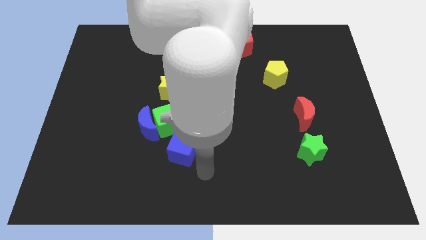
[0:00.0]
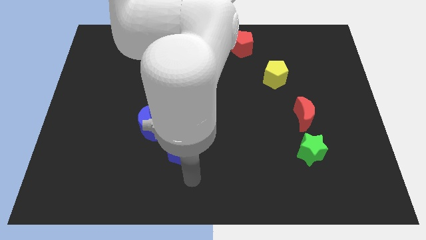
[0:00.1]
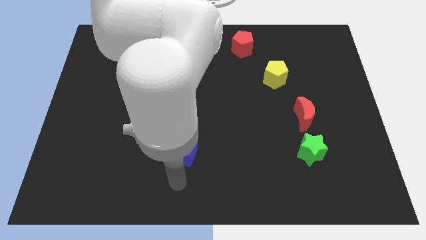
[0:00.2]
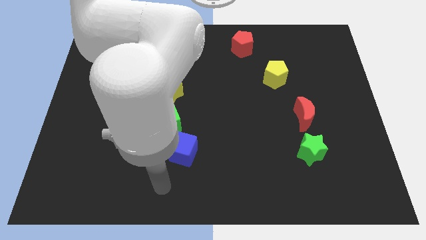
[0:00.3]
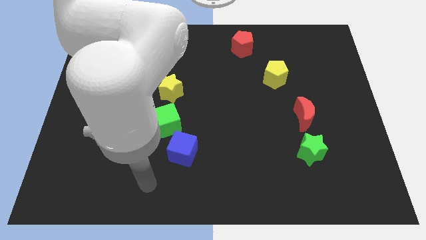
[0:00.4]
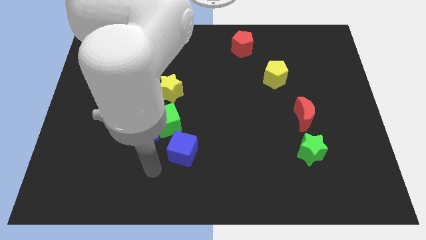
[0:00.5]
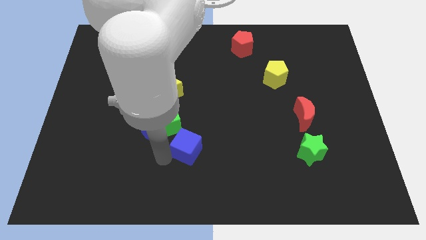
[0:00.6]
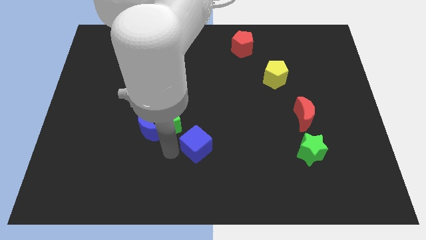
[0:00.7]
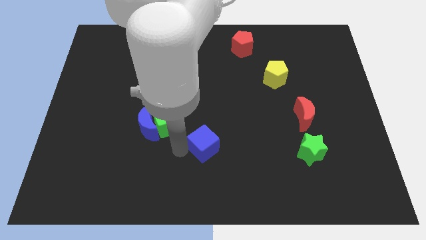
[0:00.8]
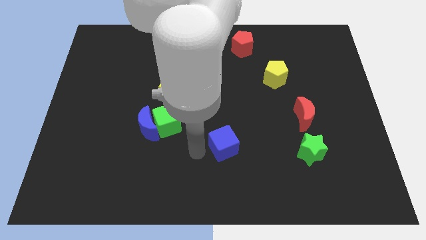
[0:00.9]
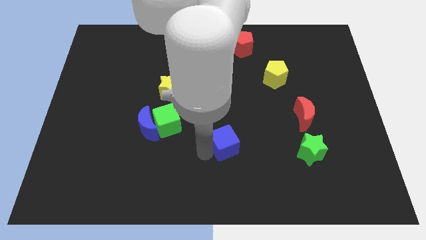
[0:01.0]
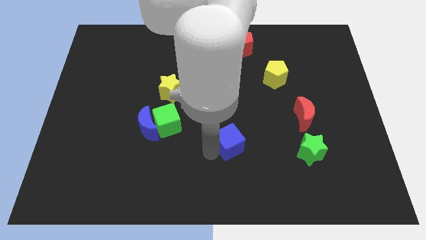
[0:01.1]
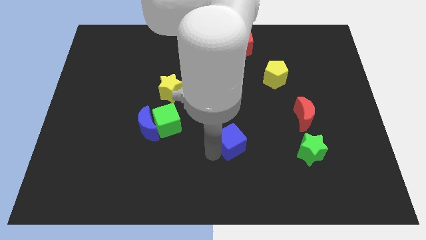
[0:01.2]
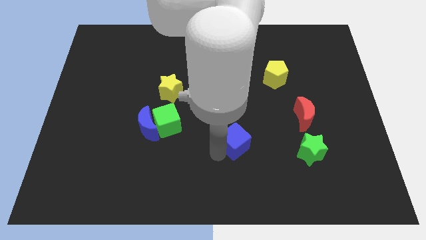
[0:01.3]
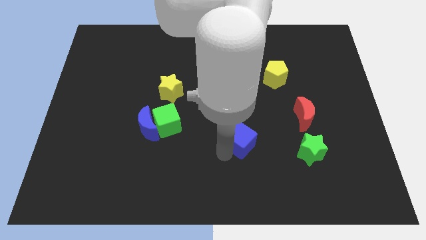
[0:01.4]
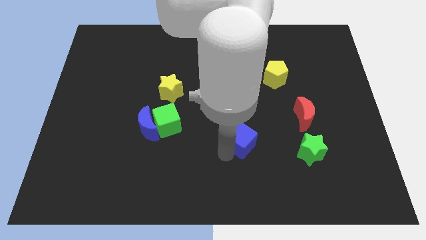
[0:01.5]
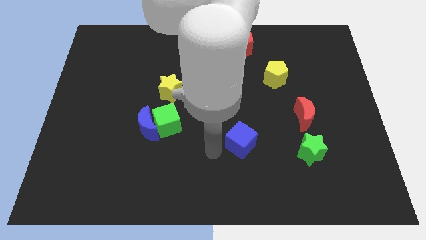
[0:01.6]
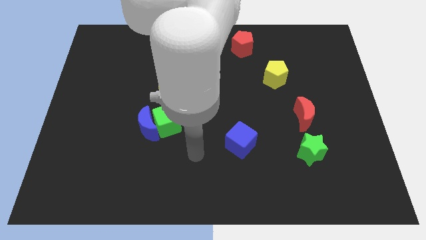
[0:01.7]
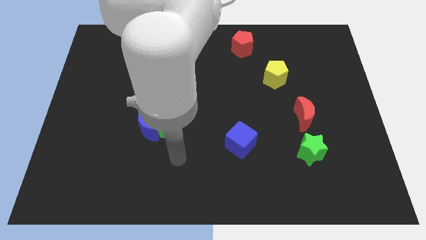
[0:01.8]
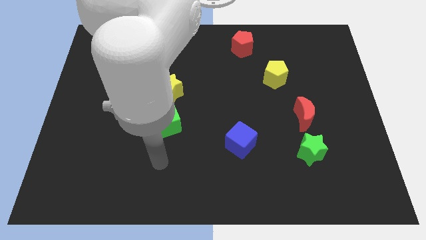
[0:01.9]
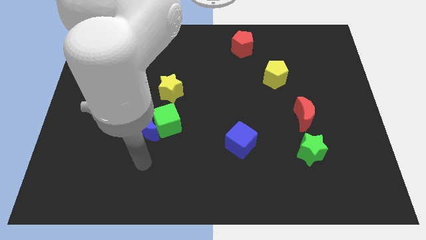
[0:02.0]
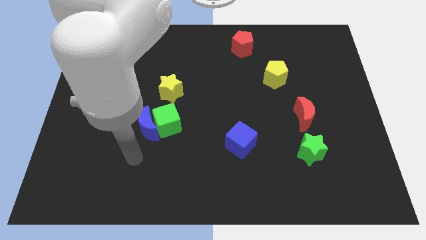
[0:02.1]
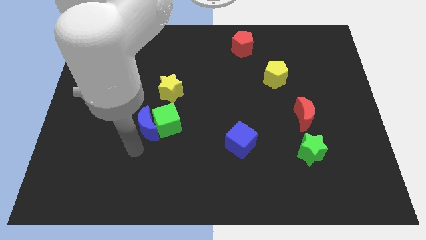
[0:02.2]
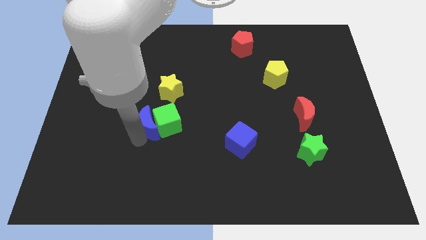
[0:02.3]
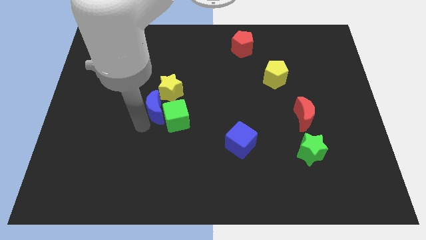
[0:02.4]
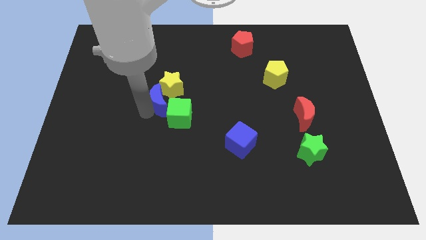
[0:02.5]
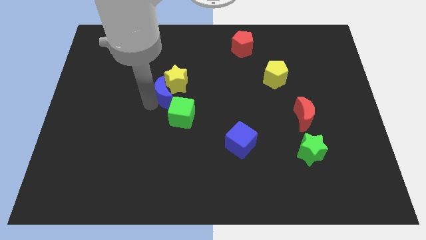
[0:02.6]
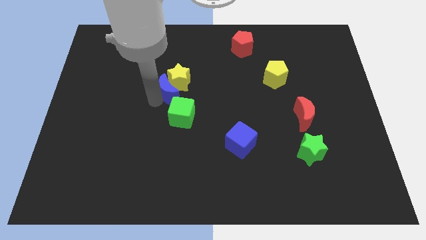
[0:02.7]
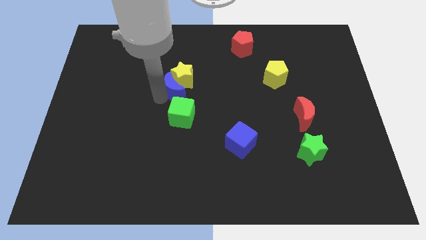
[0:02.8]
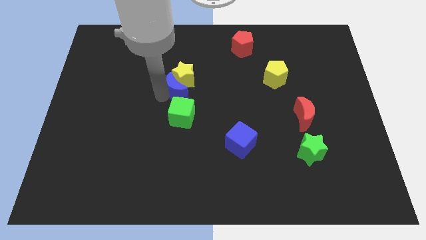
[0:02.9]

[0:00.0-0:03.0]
place the blue cube group of blocks to the center

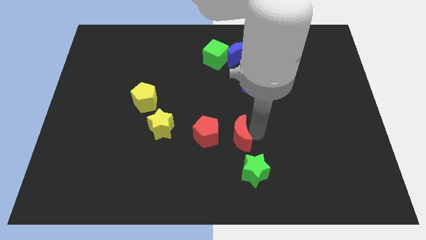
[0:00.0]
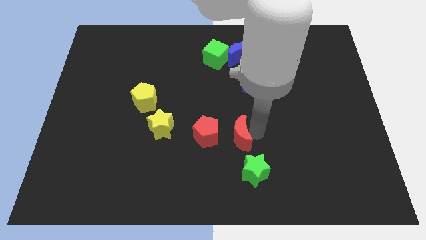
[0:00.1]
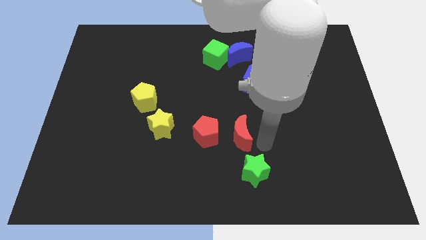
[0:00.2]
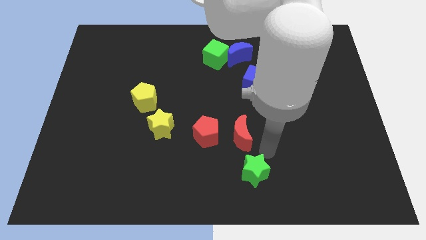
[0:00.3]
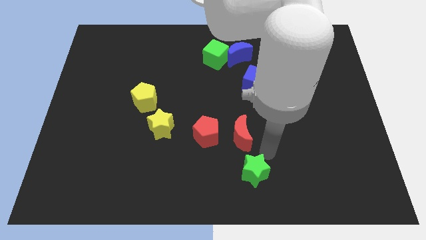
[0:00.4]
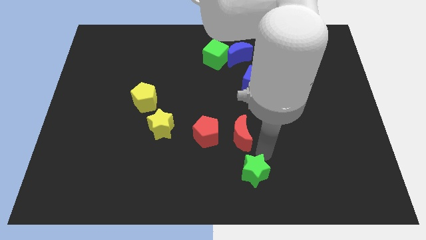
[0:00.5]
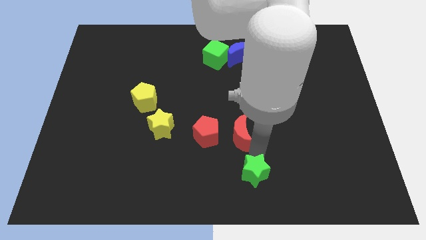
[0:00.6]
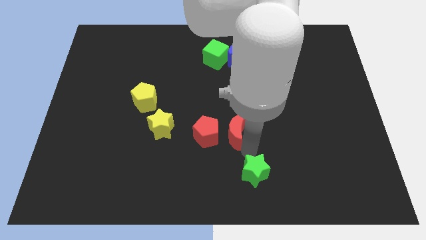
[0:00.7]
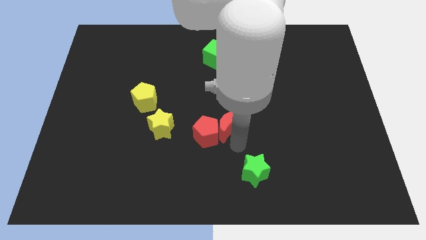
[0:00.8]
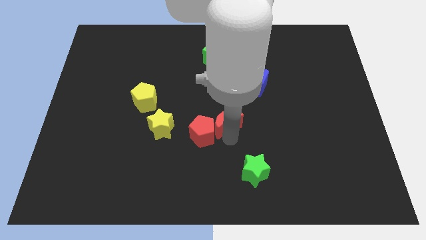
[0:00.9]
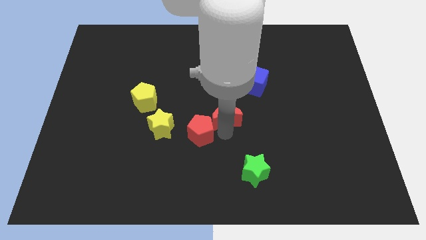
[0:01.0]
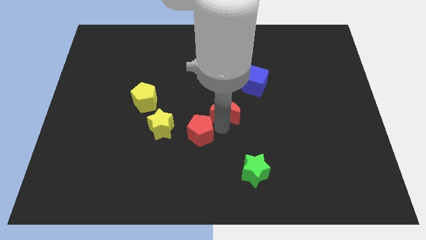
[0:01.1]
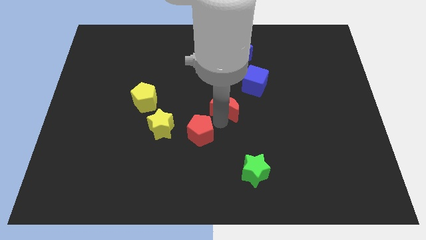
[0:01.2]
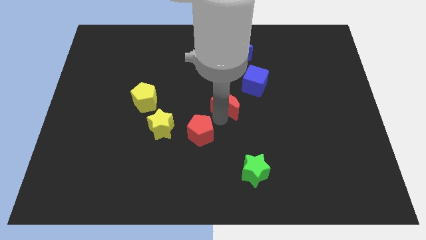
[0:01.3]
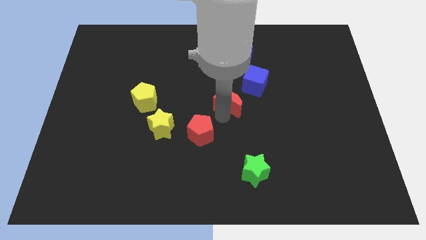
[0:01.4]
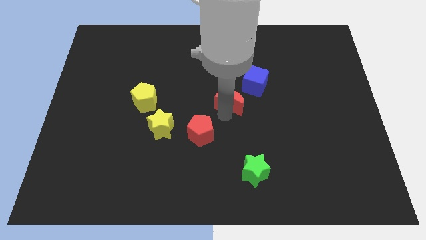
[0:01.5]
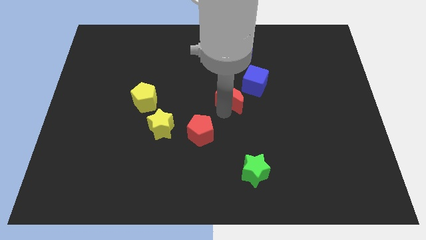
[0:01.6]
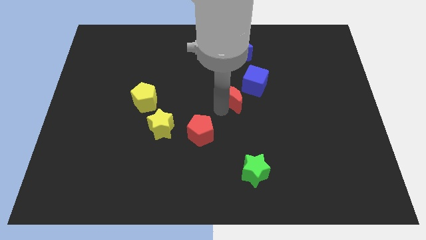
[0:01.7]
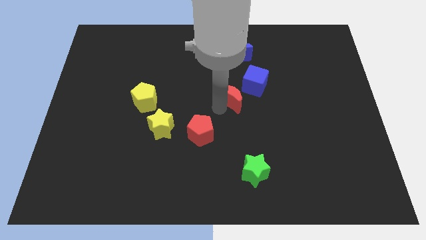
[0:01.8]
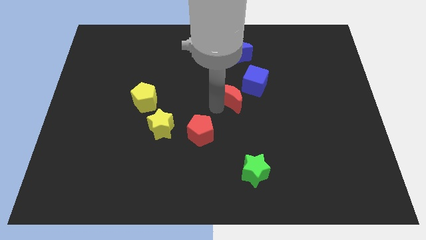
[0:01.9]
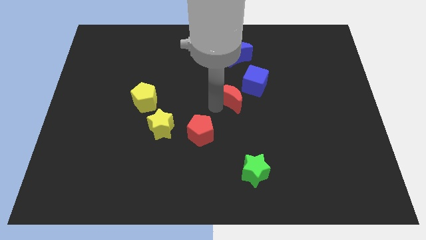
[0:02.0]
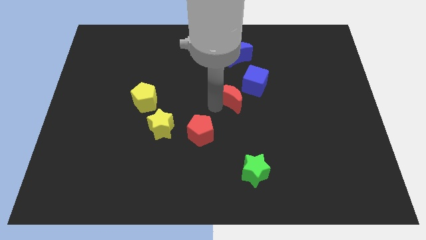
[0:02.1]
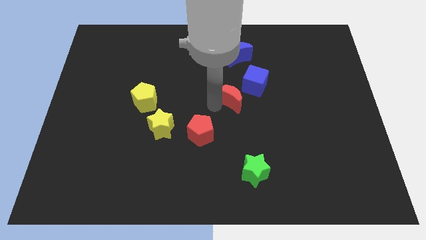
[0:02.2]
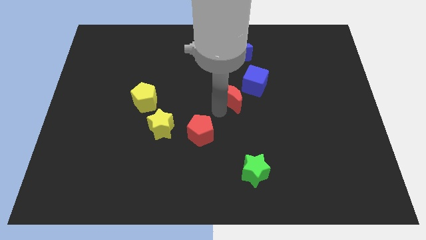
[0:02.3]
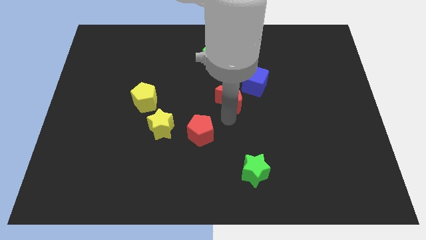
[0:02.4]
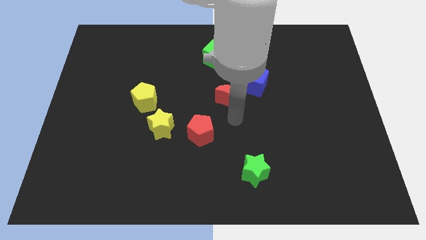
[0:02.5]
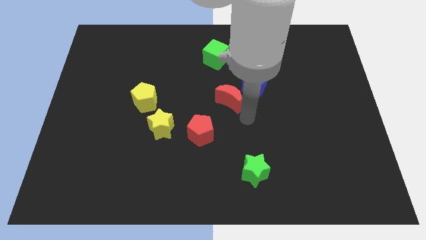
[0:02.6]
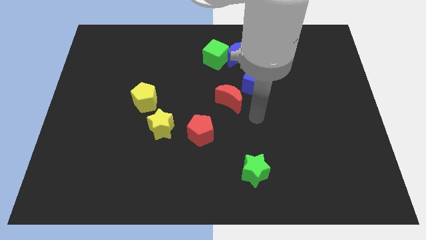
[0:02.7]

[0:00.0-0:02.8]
place the red moon in between blue cube and red pentagon

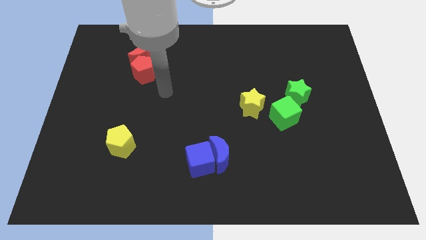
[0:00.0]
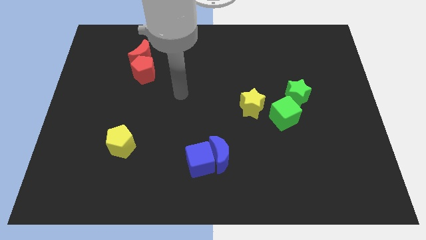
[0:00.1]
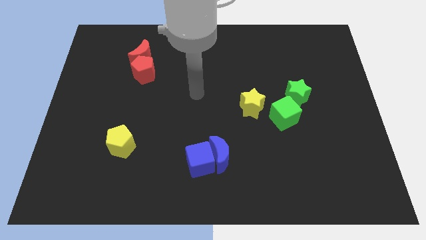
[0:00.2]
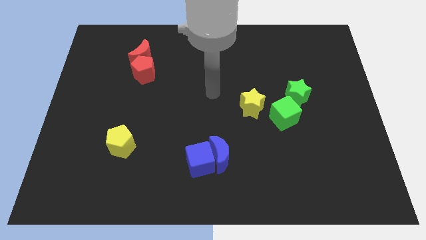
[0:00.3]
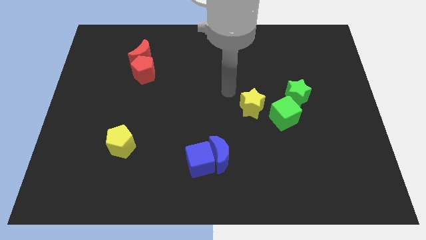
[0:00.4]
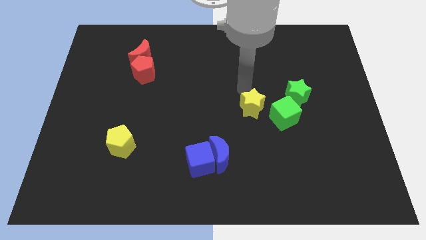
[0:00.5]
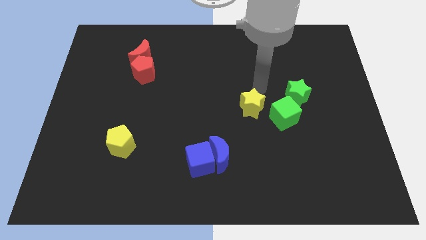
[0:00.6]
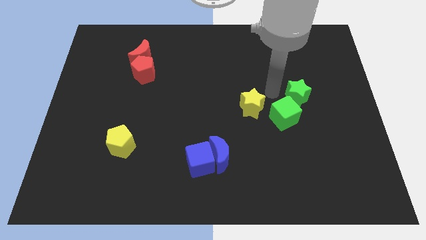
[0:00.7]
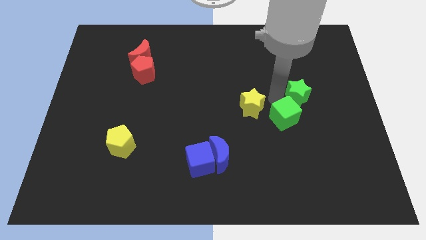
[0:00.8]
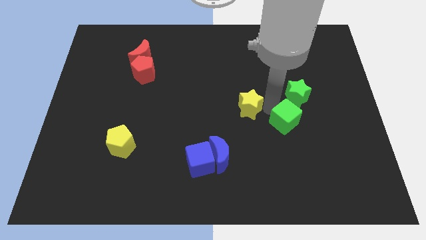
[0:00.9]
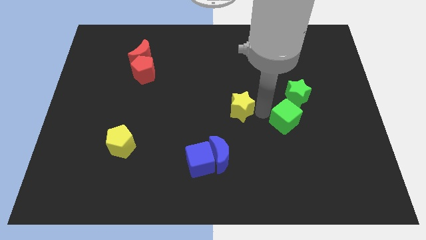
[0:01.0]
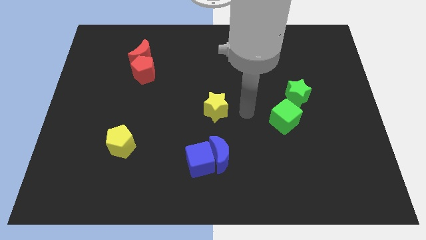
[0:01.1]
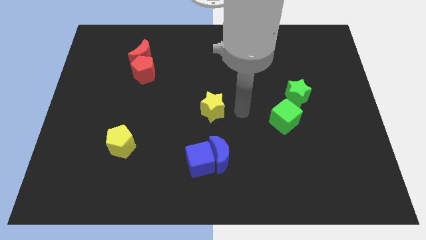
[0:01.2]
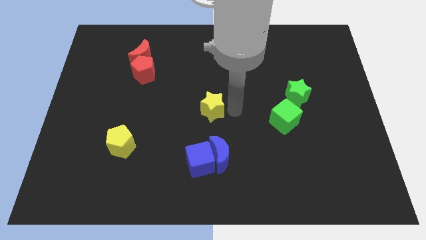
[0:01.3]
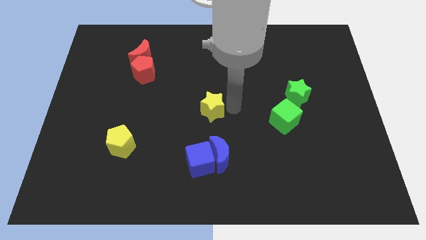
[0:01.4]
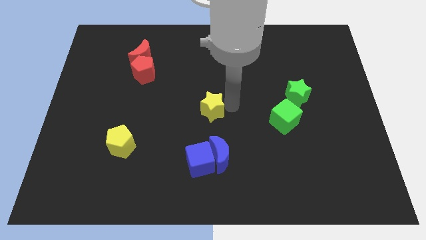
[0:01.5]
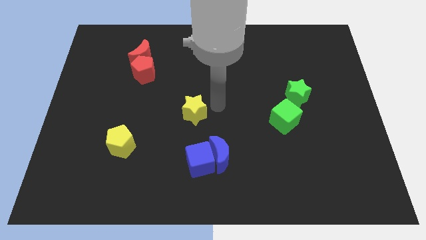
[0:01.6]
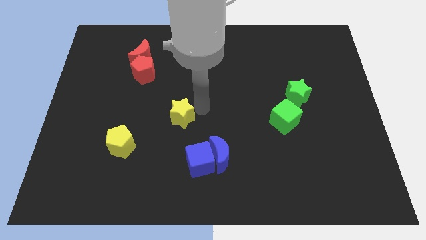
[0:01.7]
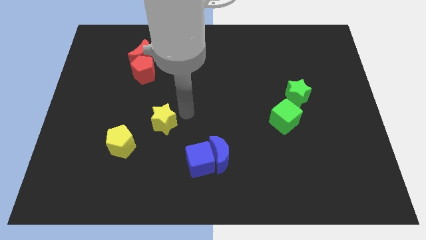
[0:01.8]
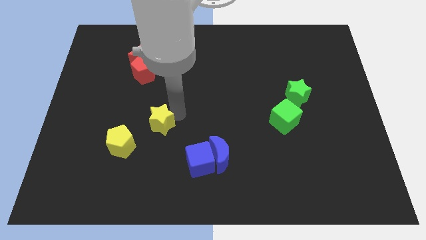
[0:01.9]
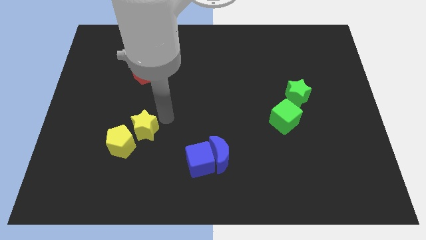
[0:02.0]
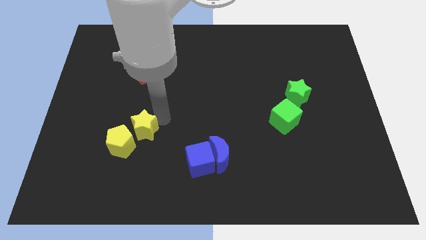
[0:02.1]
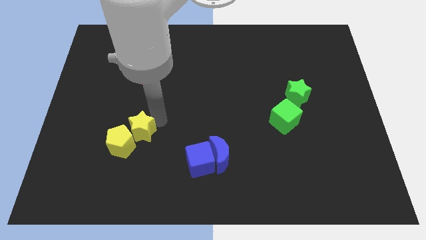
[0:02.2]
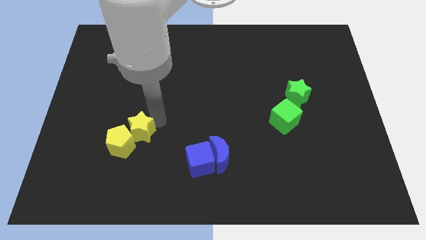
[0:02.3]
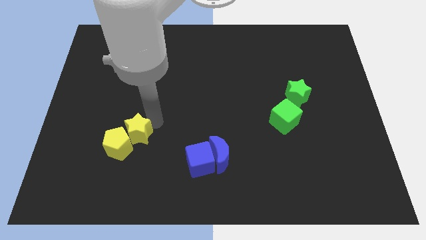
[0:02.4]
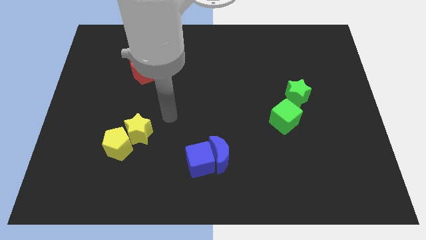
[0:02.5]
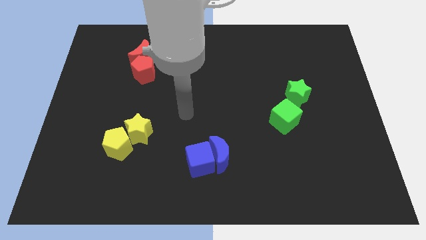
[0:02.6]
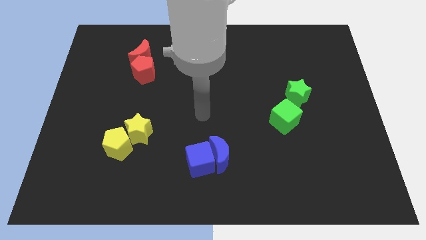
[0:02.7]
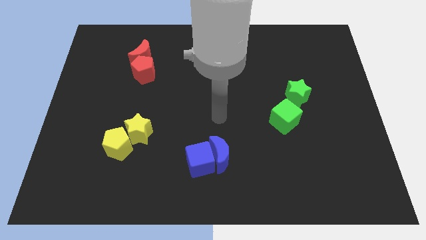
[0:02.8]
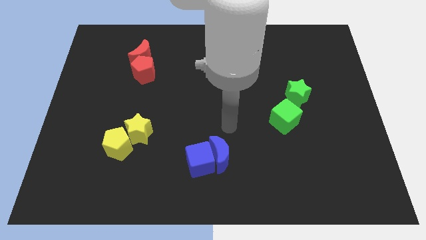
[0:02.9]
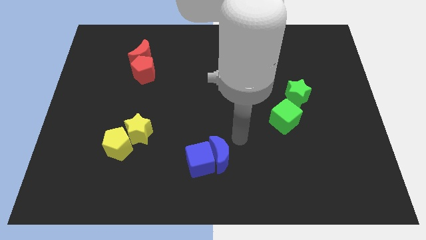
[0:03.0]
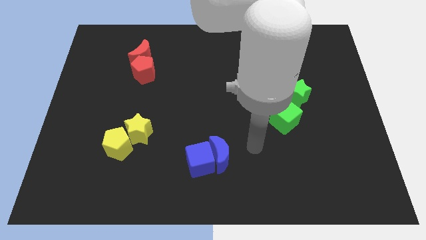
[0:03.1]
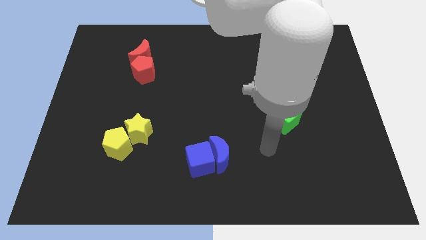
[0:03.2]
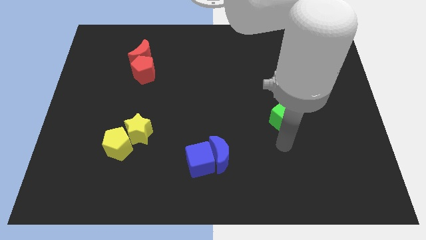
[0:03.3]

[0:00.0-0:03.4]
move the yellow star into the yellow pentagon
